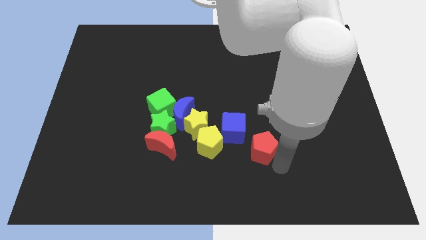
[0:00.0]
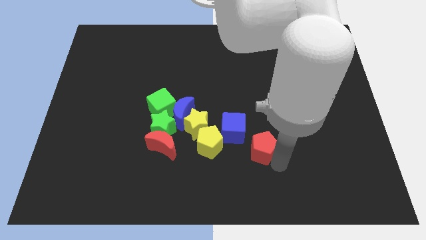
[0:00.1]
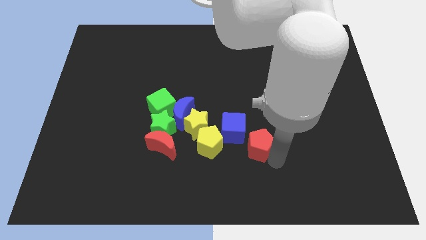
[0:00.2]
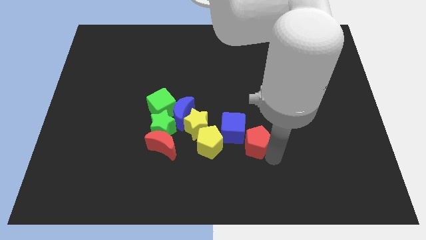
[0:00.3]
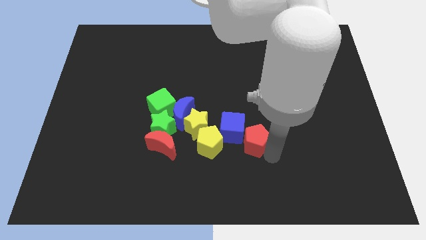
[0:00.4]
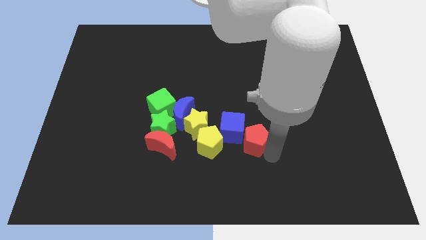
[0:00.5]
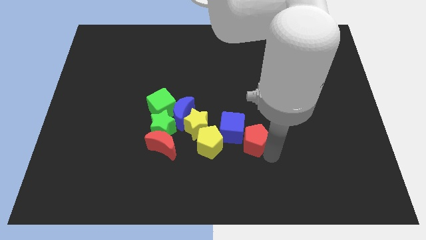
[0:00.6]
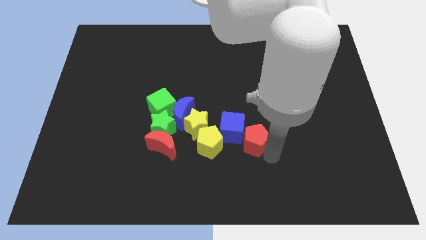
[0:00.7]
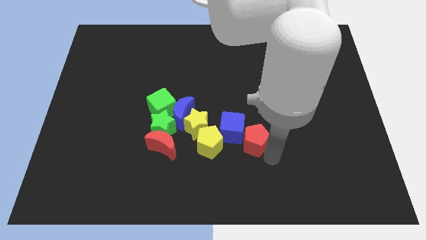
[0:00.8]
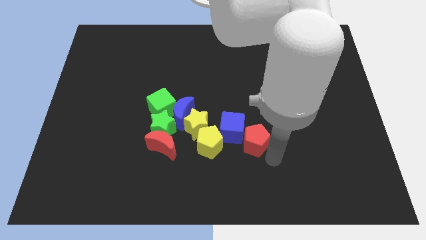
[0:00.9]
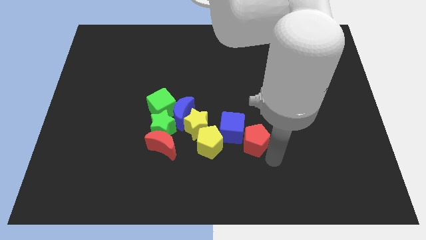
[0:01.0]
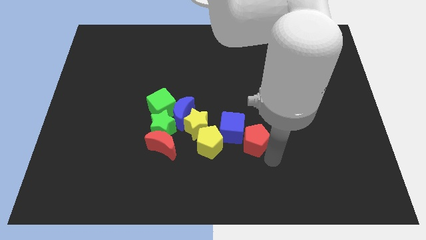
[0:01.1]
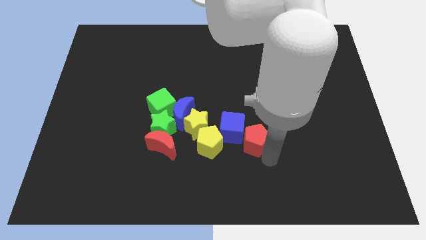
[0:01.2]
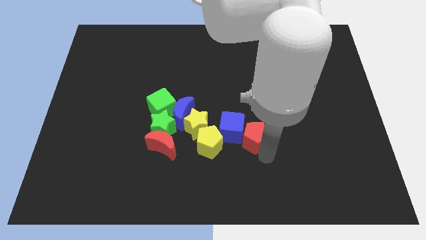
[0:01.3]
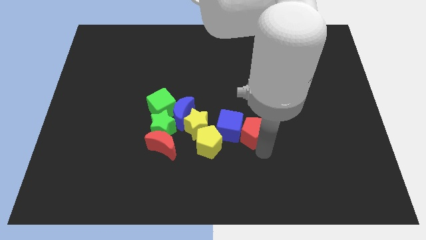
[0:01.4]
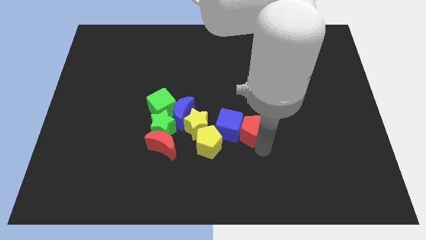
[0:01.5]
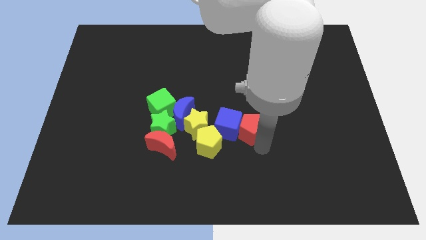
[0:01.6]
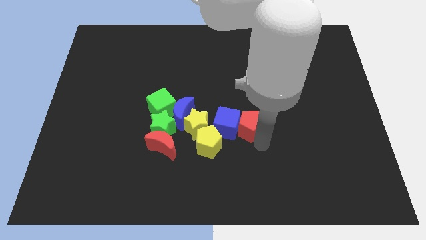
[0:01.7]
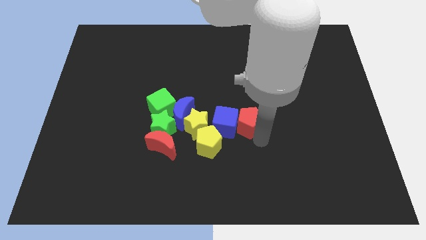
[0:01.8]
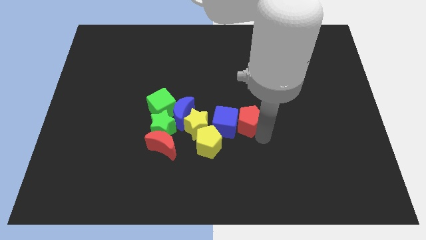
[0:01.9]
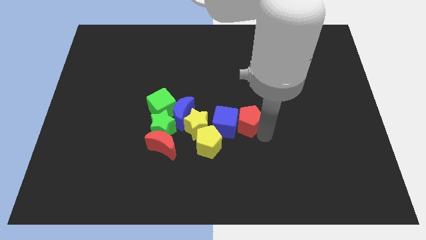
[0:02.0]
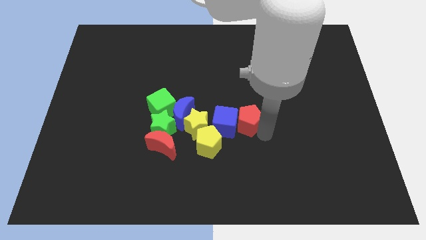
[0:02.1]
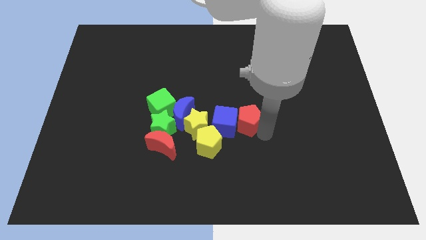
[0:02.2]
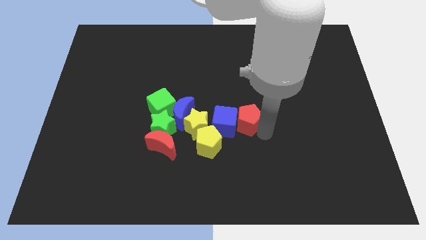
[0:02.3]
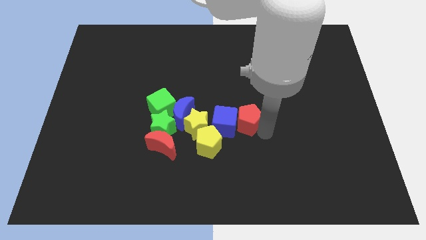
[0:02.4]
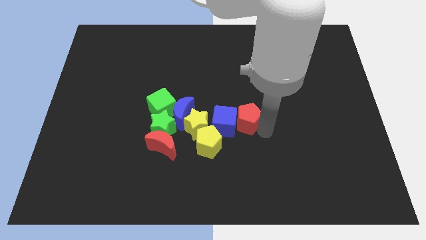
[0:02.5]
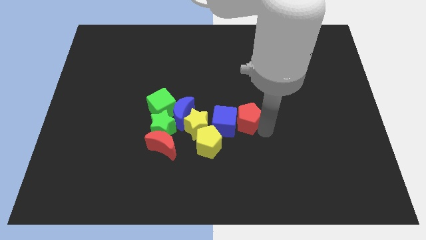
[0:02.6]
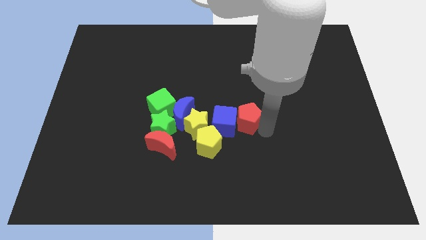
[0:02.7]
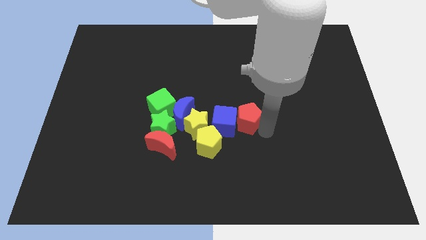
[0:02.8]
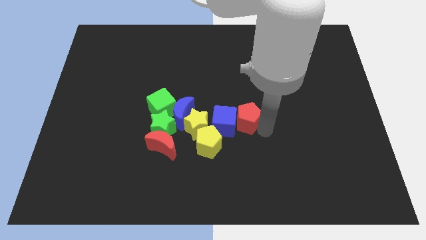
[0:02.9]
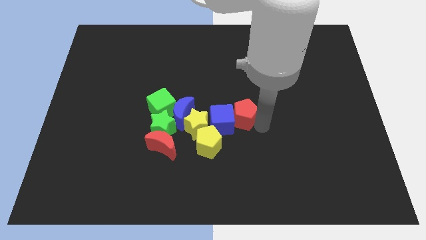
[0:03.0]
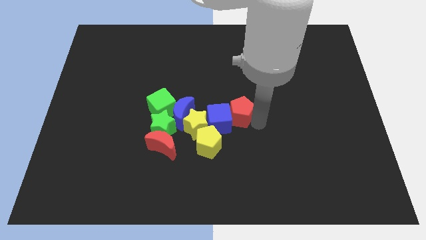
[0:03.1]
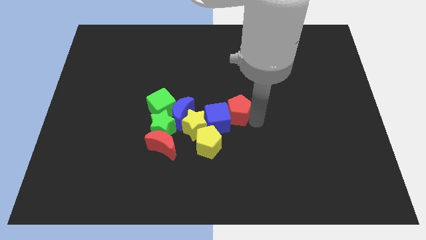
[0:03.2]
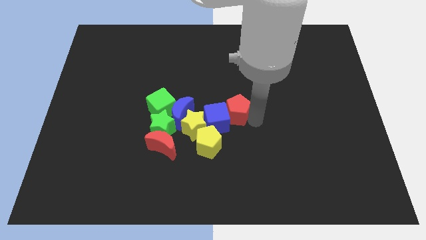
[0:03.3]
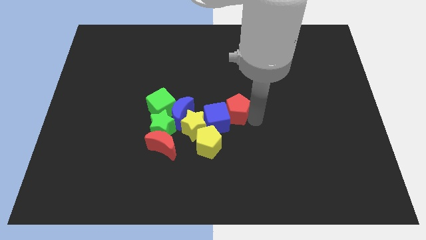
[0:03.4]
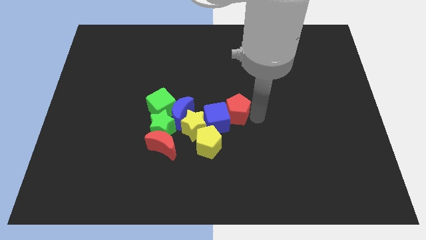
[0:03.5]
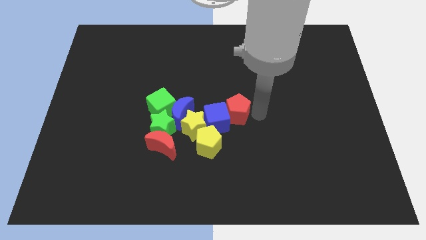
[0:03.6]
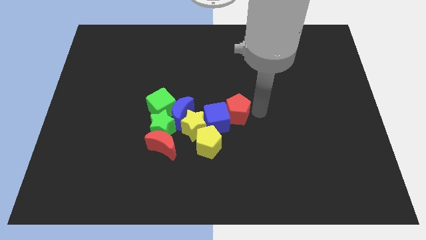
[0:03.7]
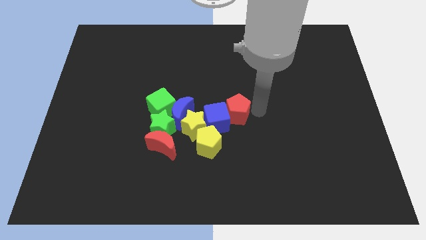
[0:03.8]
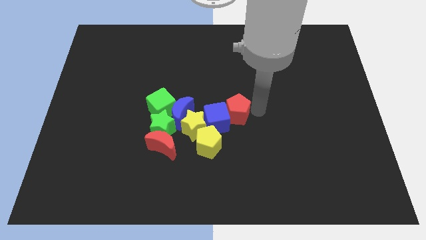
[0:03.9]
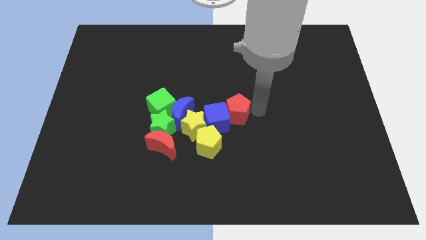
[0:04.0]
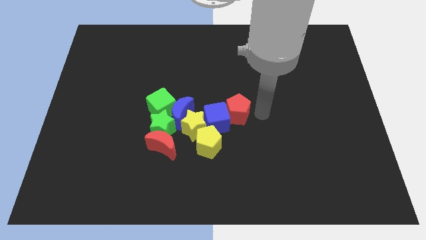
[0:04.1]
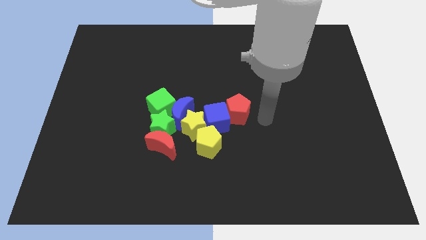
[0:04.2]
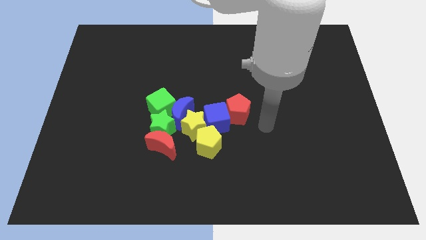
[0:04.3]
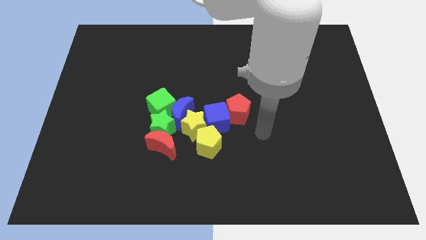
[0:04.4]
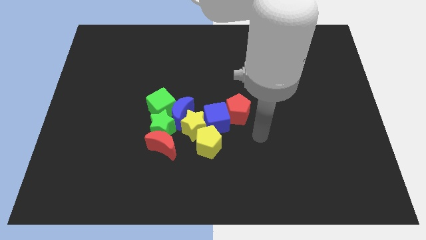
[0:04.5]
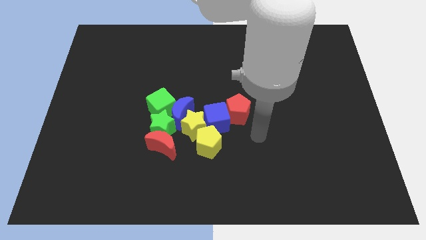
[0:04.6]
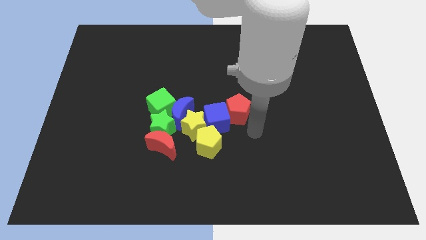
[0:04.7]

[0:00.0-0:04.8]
push the red pentagon to the top

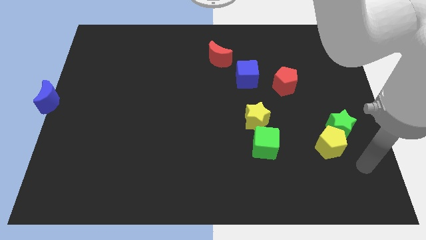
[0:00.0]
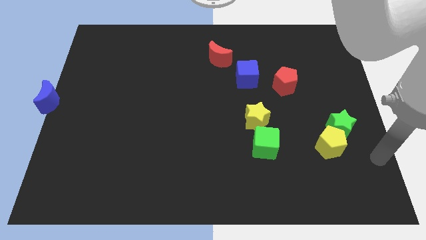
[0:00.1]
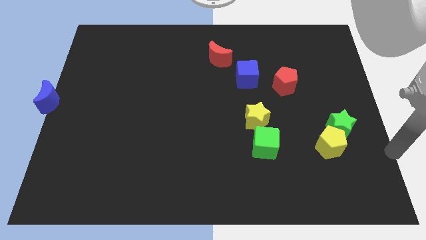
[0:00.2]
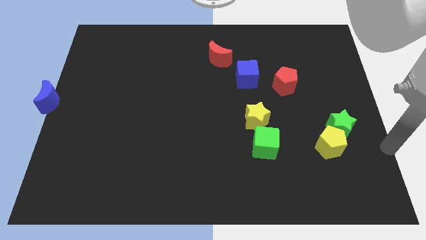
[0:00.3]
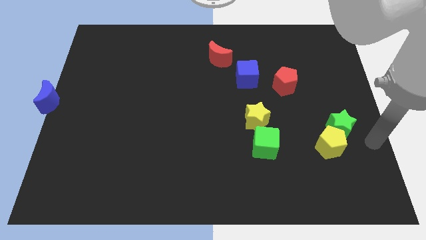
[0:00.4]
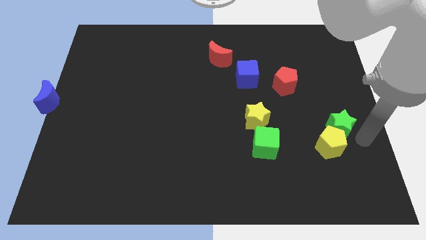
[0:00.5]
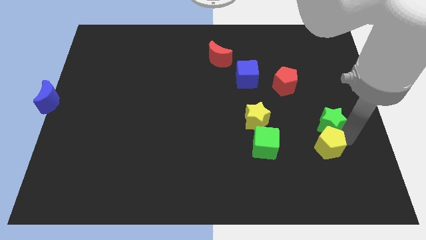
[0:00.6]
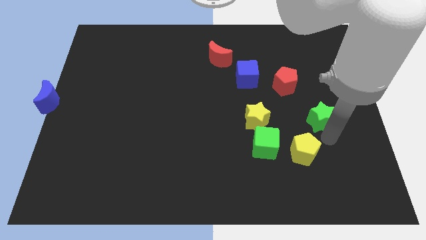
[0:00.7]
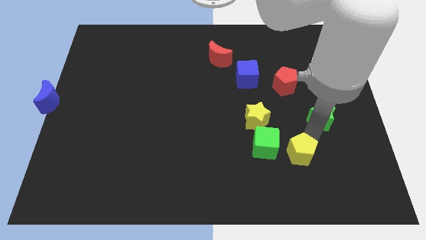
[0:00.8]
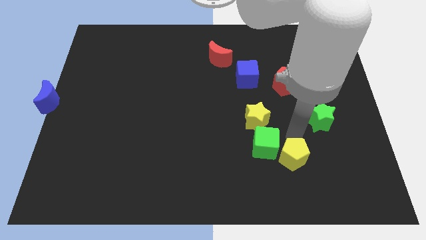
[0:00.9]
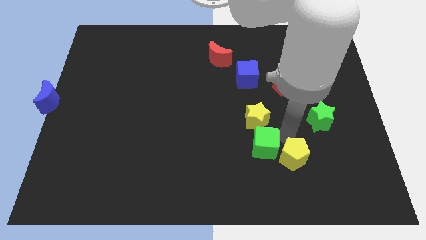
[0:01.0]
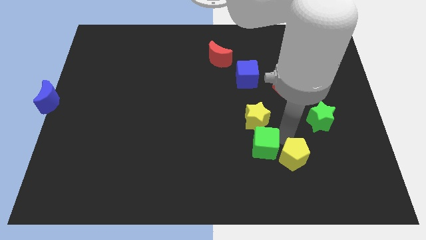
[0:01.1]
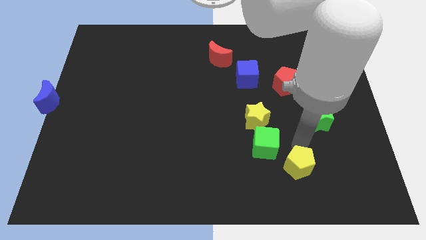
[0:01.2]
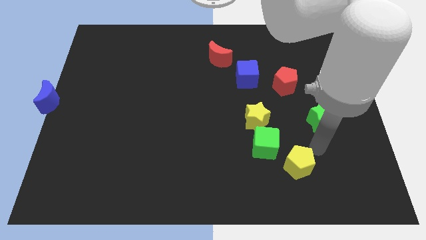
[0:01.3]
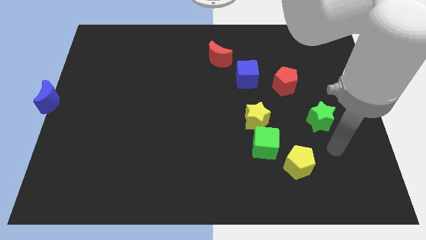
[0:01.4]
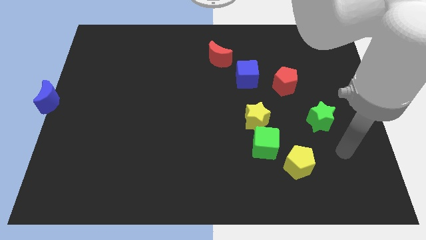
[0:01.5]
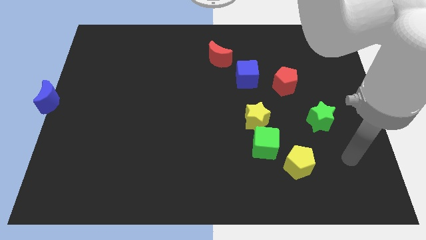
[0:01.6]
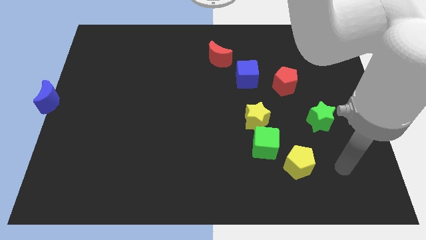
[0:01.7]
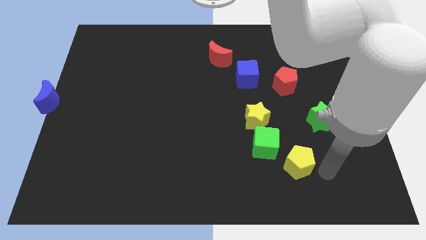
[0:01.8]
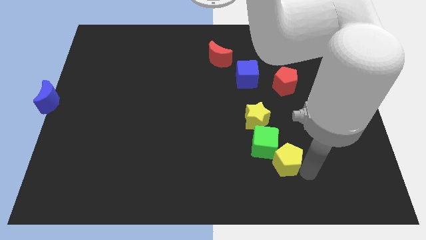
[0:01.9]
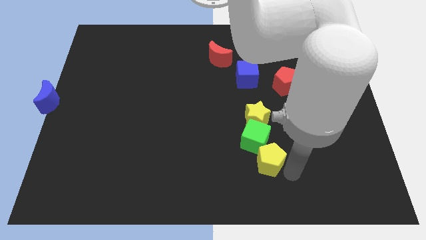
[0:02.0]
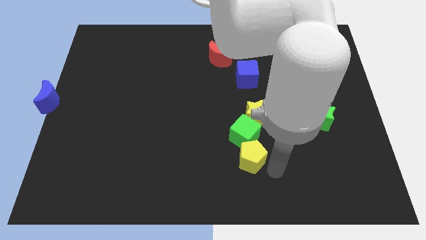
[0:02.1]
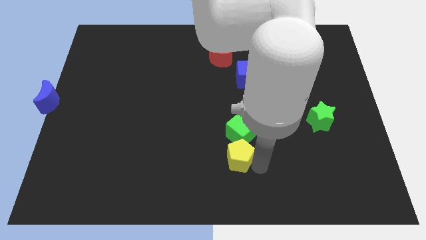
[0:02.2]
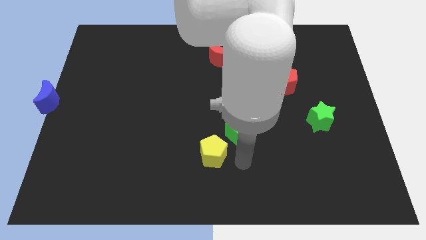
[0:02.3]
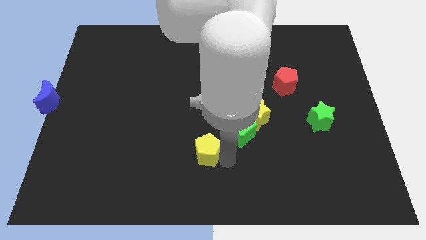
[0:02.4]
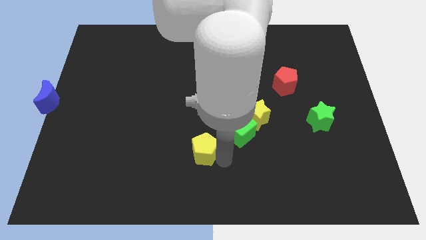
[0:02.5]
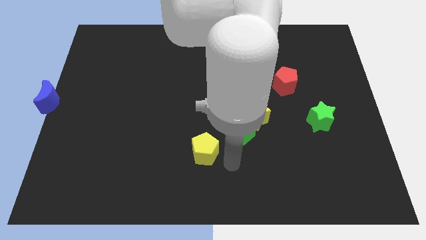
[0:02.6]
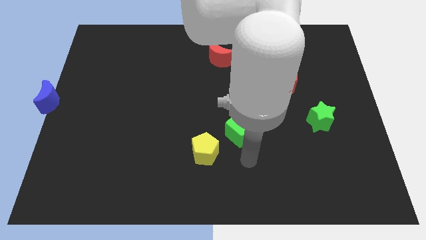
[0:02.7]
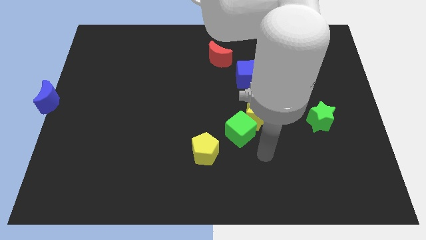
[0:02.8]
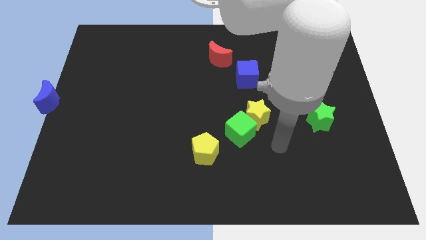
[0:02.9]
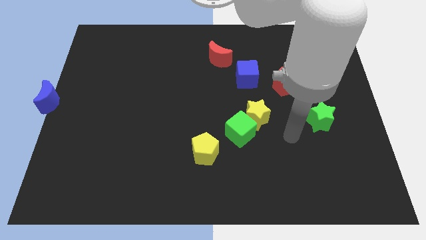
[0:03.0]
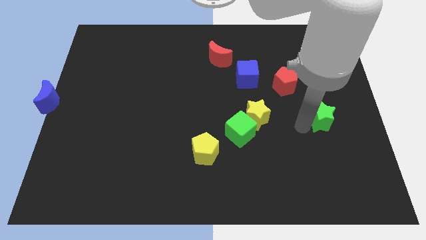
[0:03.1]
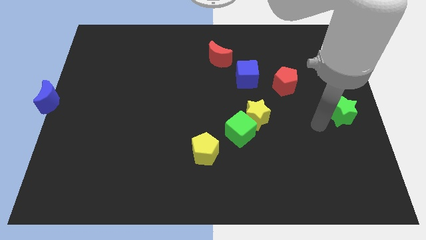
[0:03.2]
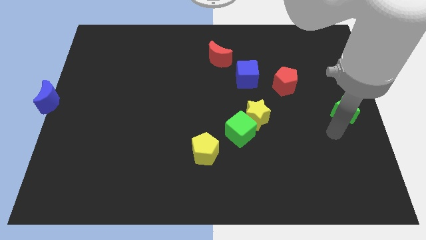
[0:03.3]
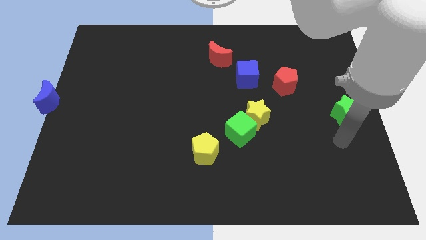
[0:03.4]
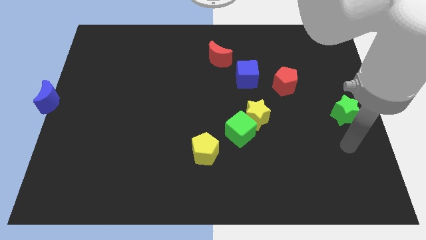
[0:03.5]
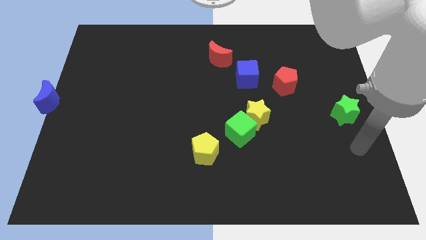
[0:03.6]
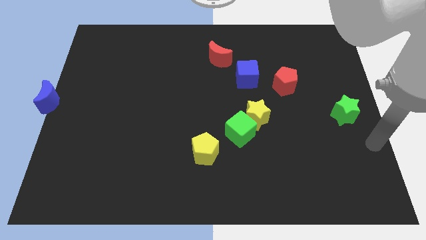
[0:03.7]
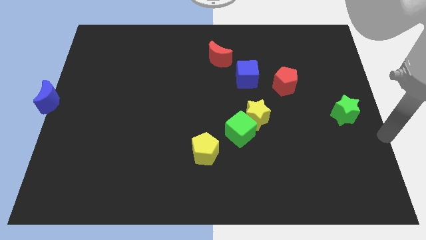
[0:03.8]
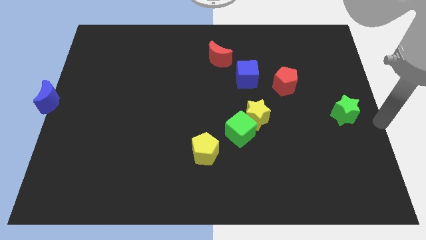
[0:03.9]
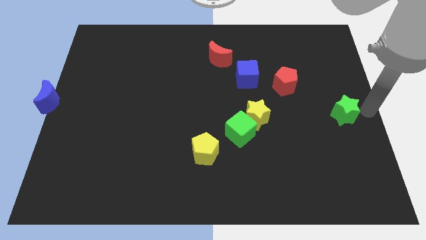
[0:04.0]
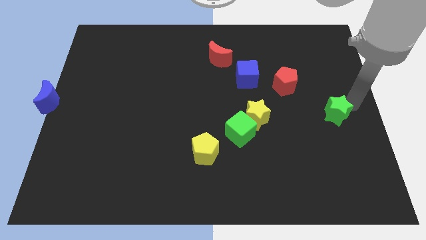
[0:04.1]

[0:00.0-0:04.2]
separate the yellow pentagon from the green star
